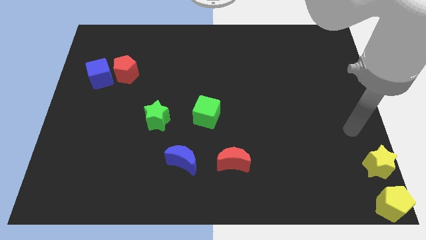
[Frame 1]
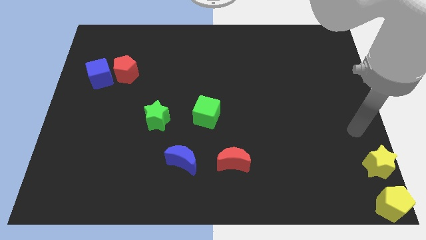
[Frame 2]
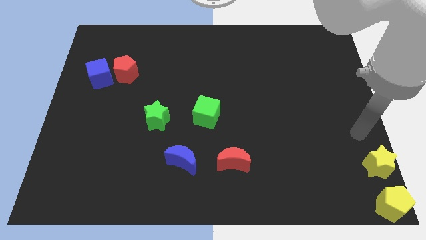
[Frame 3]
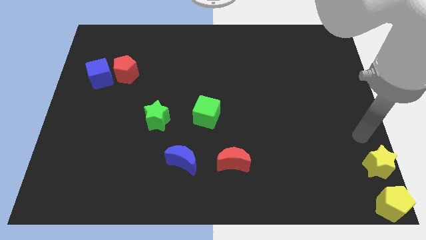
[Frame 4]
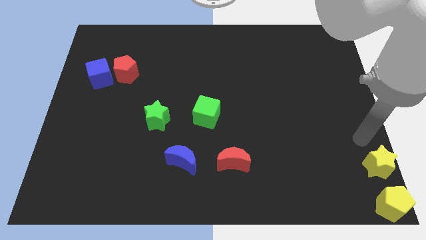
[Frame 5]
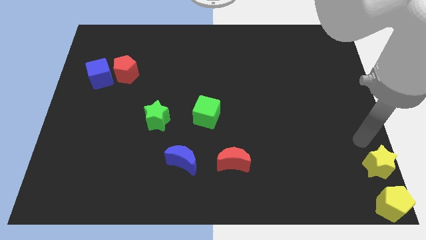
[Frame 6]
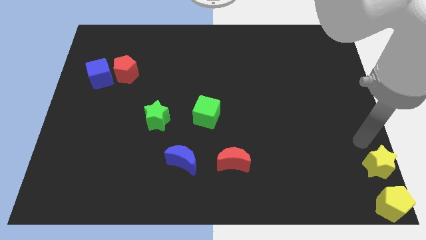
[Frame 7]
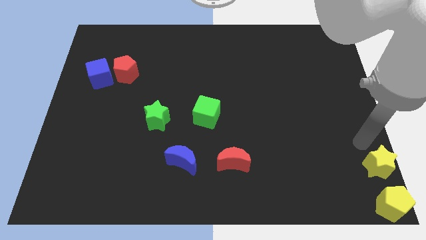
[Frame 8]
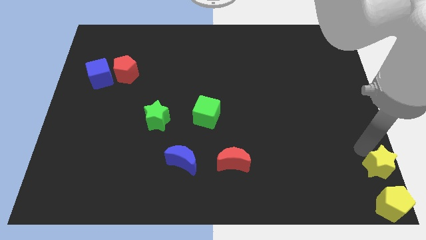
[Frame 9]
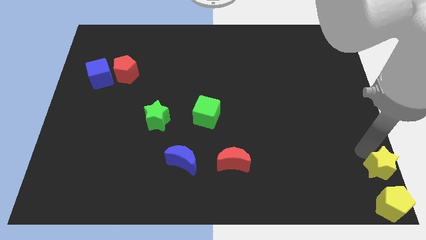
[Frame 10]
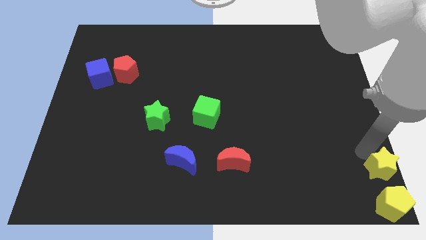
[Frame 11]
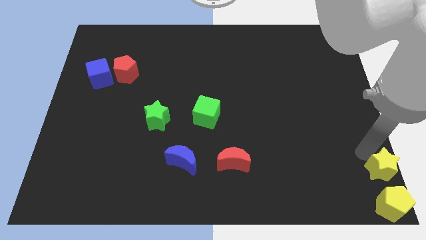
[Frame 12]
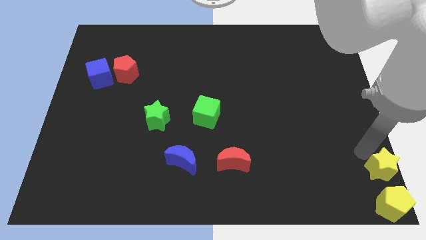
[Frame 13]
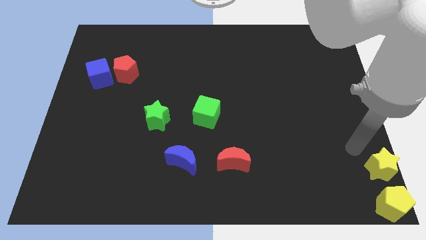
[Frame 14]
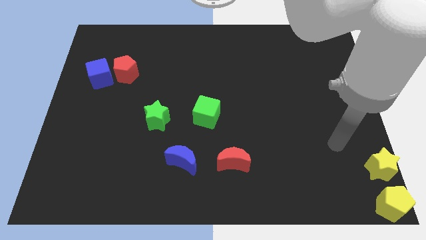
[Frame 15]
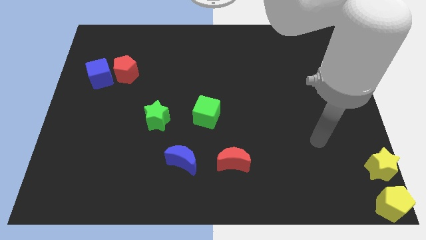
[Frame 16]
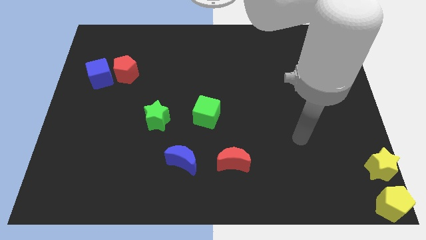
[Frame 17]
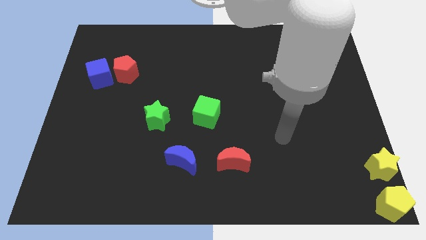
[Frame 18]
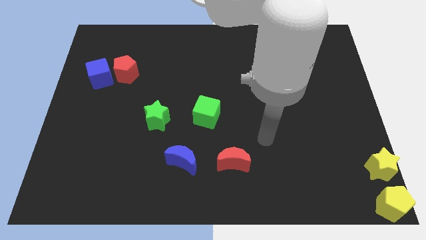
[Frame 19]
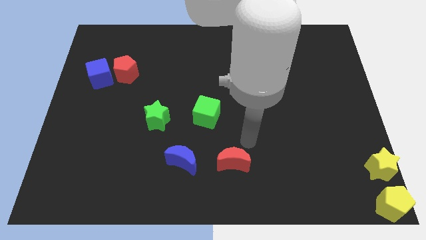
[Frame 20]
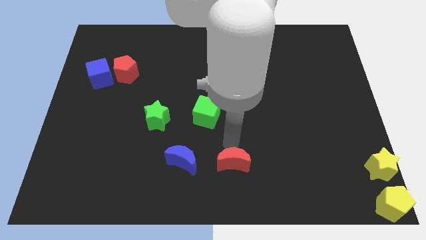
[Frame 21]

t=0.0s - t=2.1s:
place your arm in between red moon and blue moon

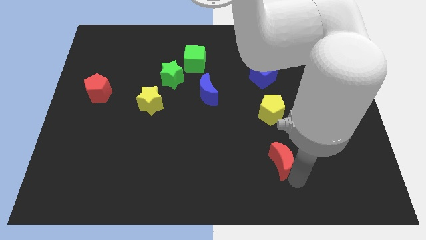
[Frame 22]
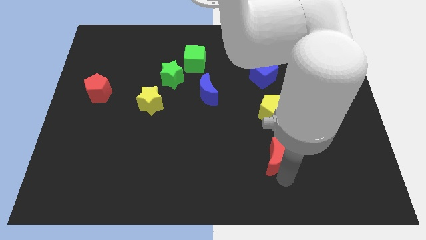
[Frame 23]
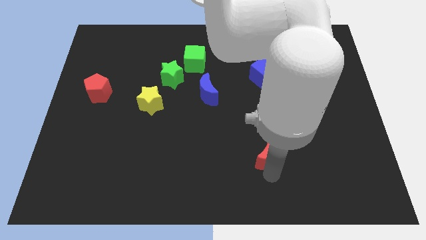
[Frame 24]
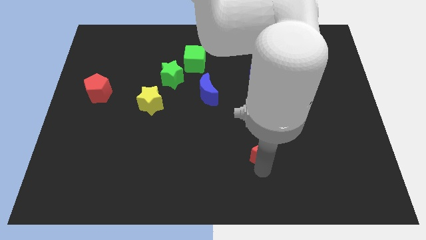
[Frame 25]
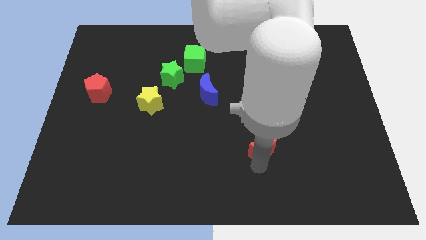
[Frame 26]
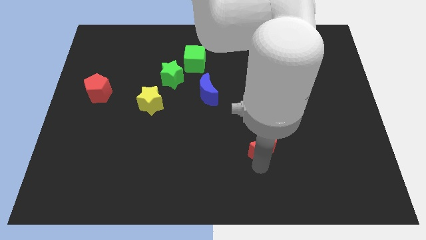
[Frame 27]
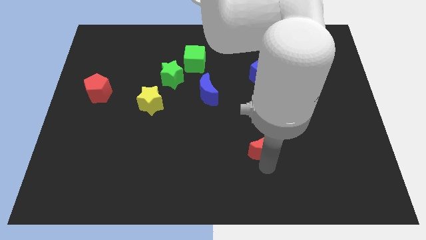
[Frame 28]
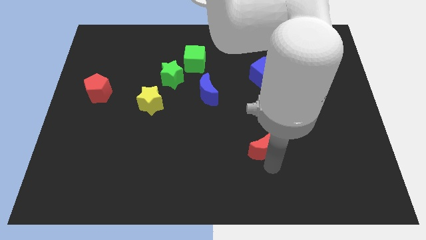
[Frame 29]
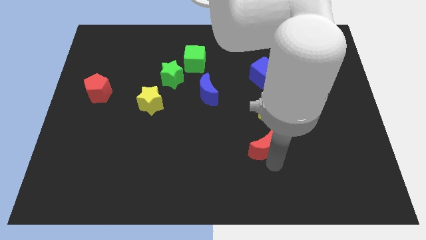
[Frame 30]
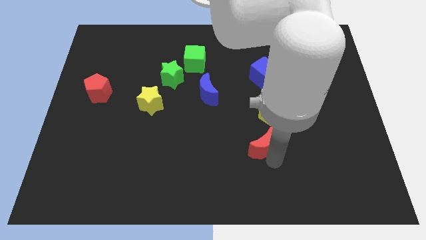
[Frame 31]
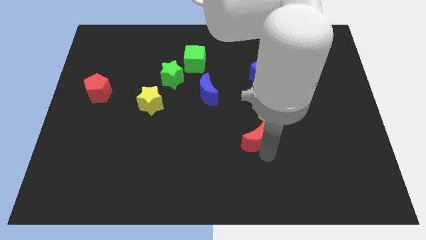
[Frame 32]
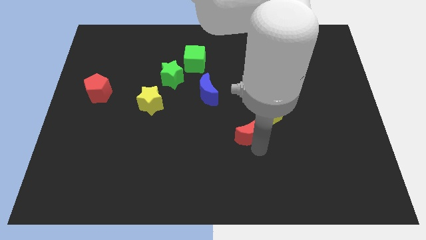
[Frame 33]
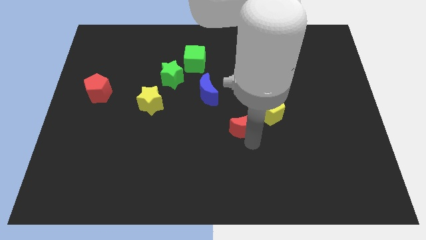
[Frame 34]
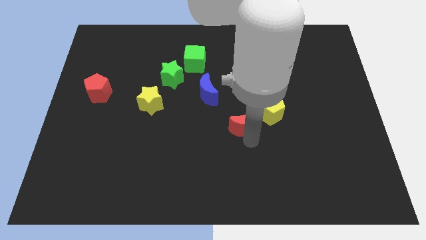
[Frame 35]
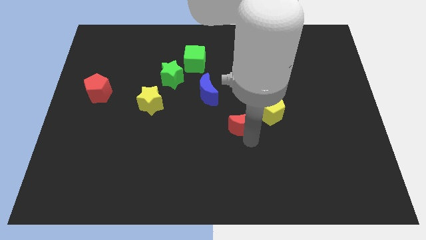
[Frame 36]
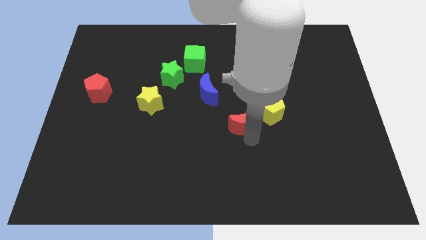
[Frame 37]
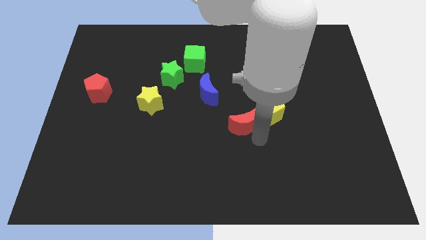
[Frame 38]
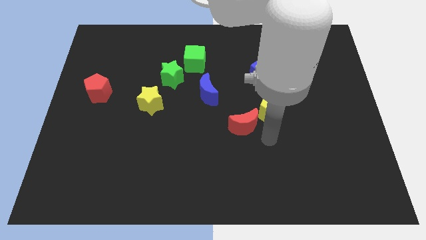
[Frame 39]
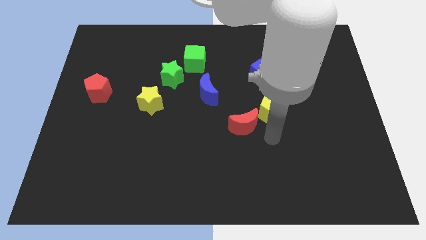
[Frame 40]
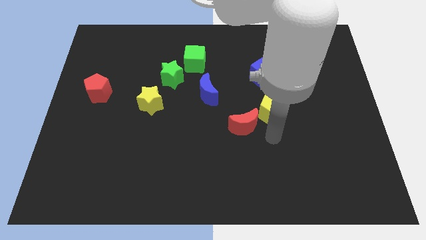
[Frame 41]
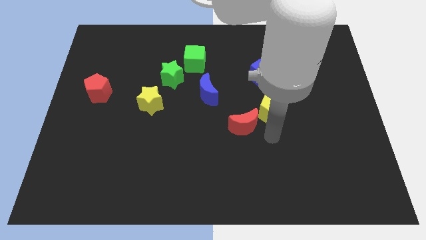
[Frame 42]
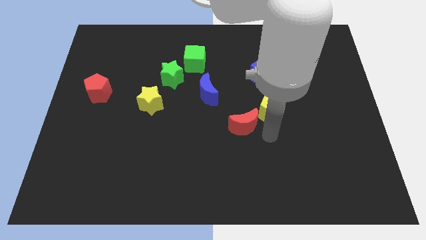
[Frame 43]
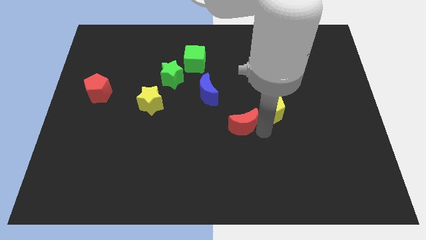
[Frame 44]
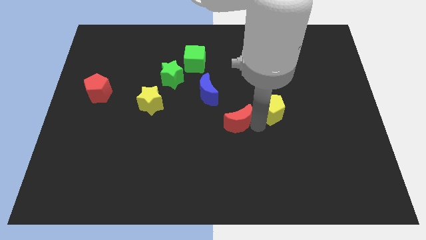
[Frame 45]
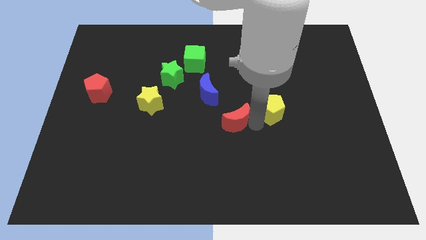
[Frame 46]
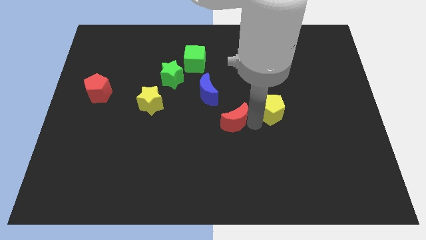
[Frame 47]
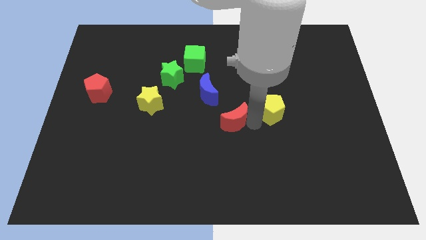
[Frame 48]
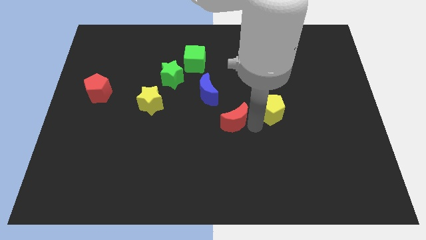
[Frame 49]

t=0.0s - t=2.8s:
push the red crescent towards the blue crescent

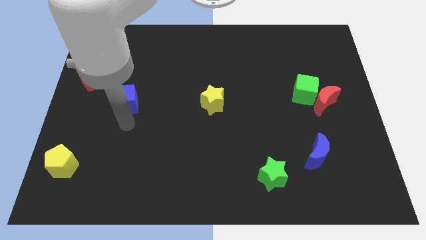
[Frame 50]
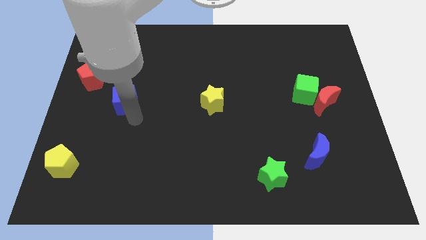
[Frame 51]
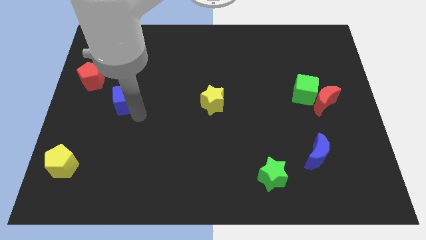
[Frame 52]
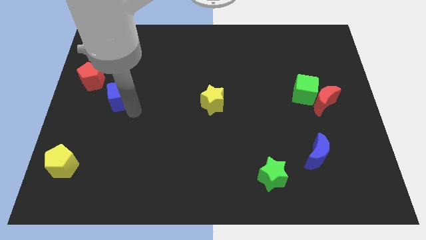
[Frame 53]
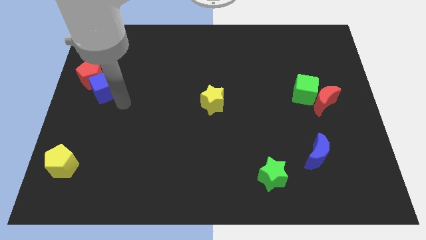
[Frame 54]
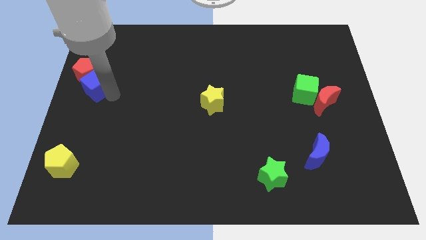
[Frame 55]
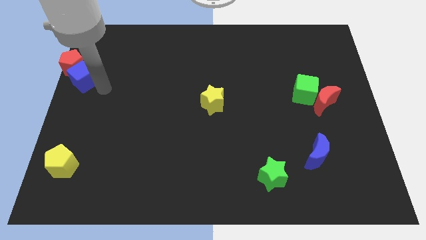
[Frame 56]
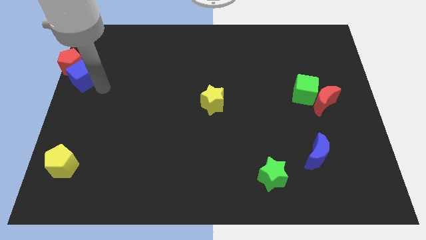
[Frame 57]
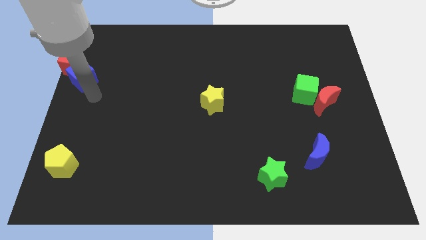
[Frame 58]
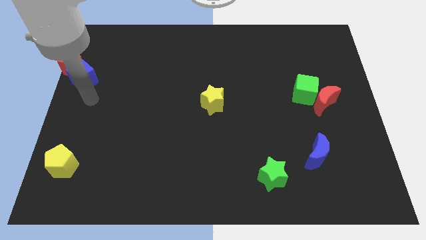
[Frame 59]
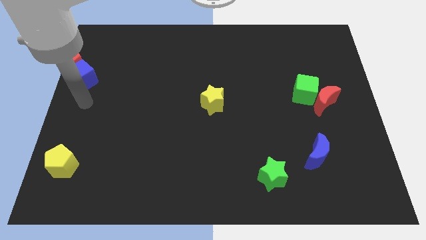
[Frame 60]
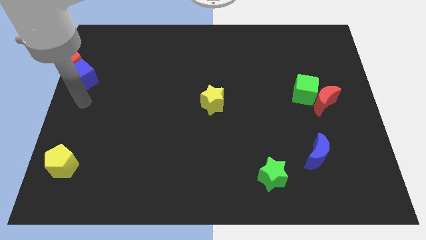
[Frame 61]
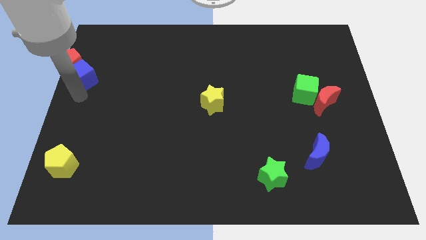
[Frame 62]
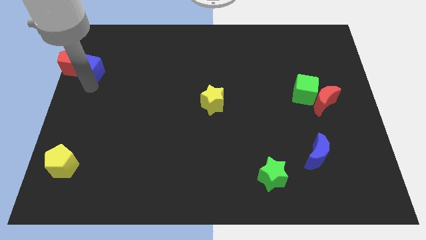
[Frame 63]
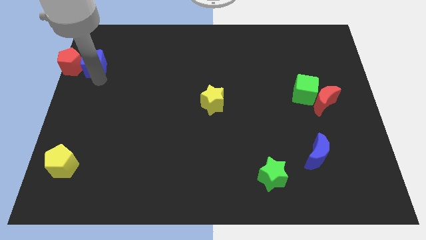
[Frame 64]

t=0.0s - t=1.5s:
move blue cube beside red pentagon

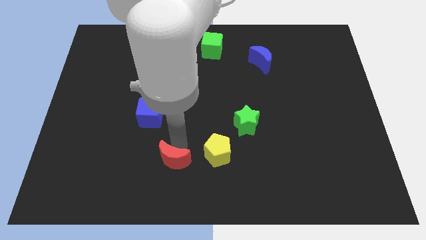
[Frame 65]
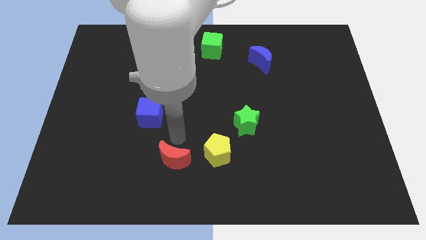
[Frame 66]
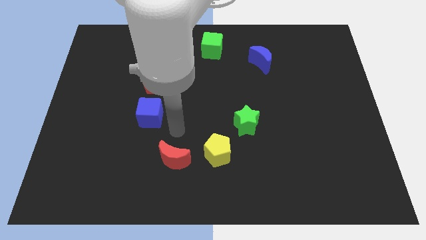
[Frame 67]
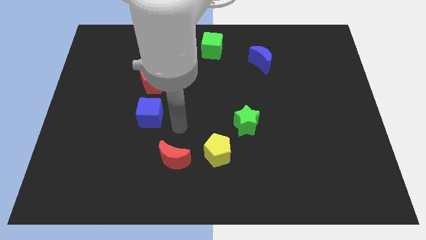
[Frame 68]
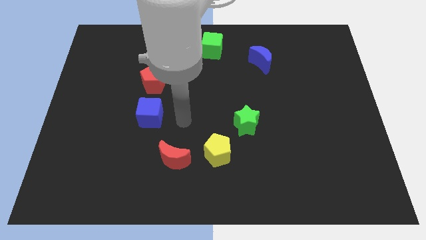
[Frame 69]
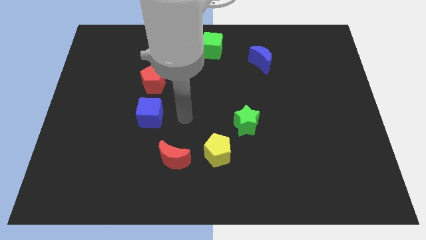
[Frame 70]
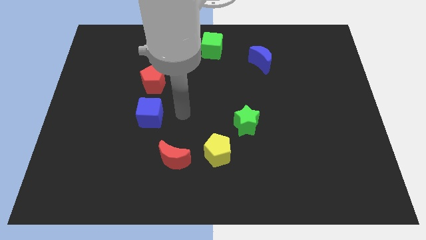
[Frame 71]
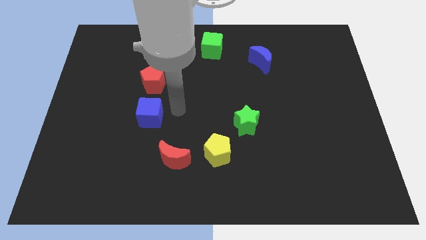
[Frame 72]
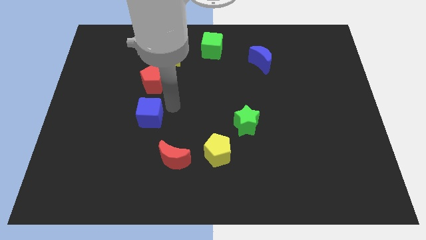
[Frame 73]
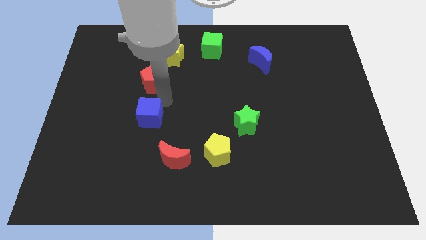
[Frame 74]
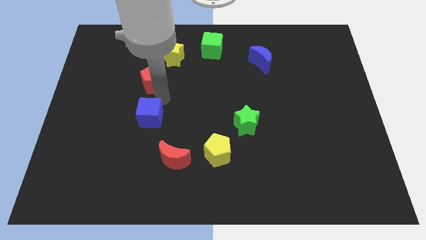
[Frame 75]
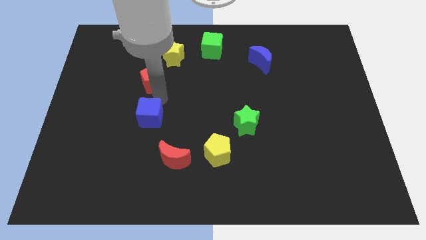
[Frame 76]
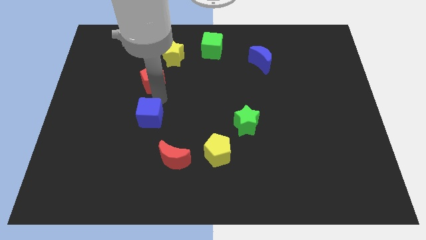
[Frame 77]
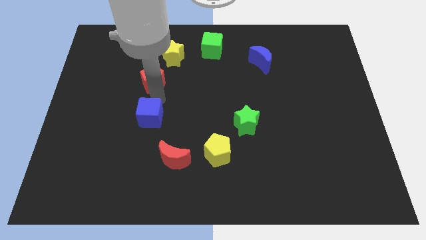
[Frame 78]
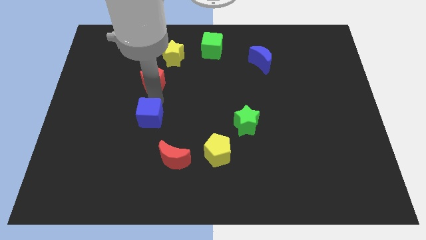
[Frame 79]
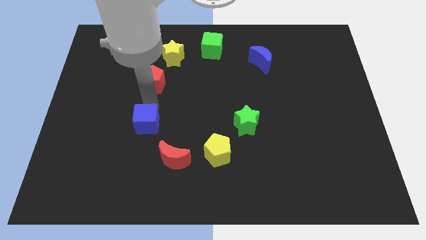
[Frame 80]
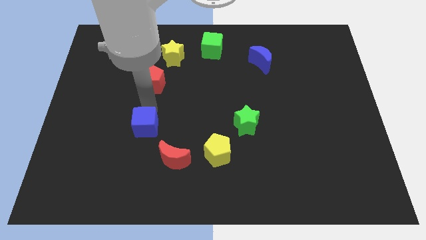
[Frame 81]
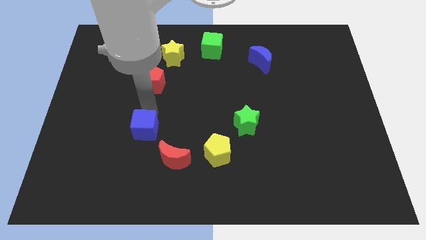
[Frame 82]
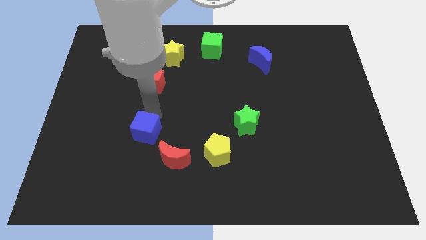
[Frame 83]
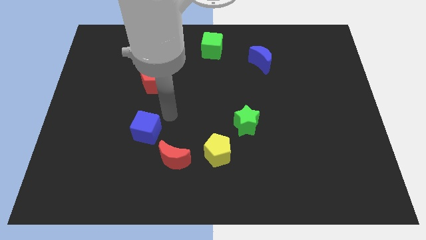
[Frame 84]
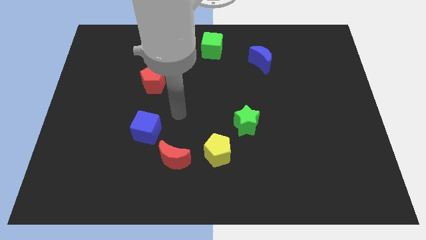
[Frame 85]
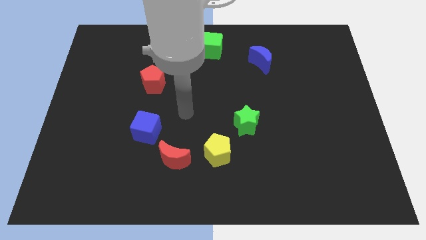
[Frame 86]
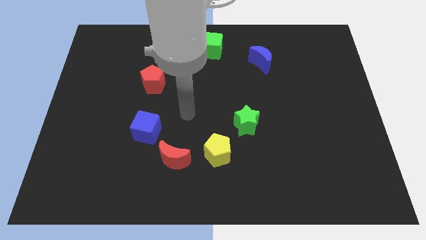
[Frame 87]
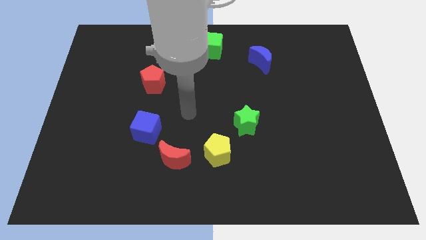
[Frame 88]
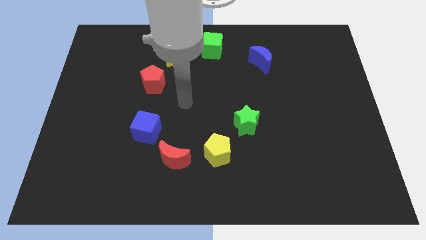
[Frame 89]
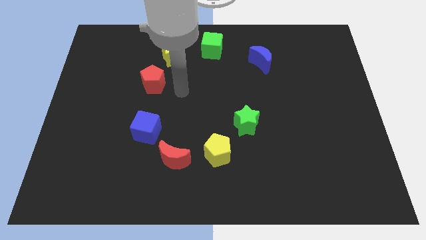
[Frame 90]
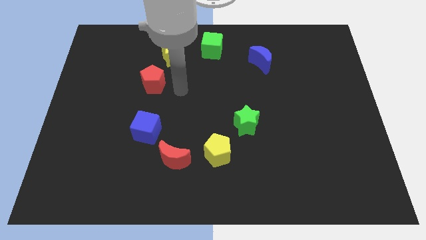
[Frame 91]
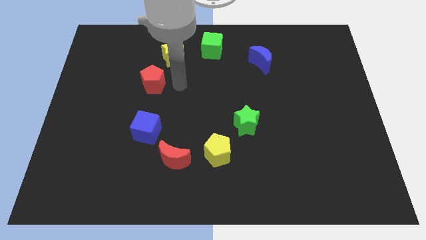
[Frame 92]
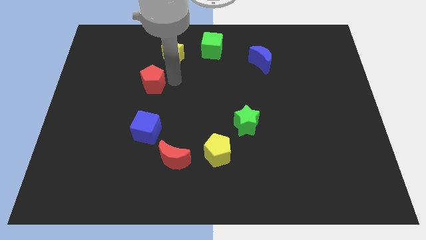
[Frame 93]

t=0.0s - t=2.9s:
adjust the blue cube to right side of red moon
